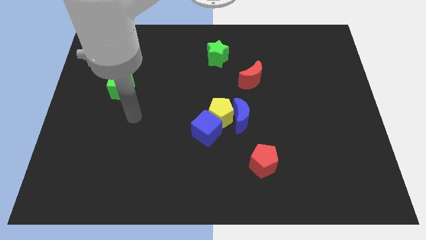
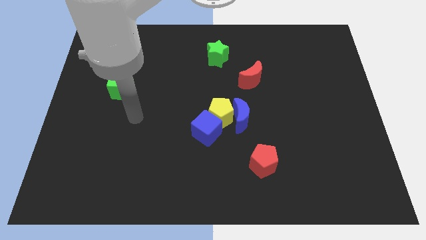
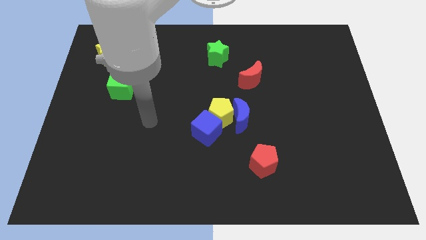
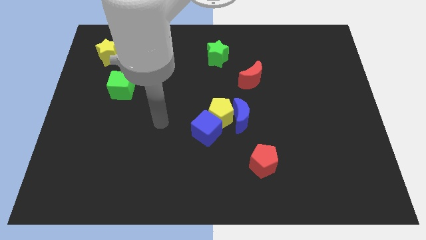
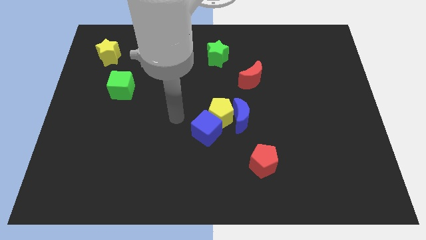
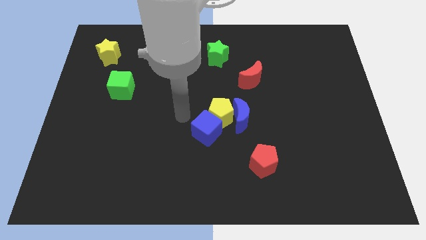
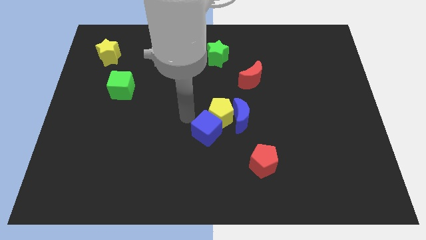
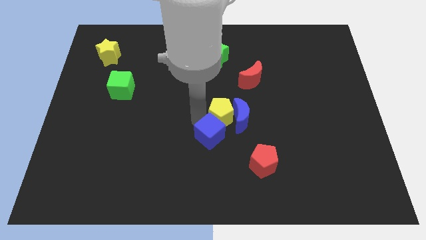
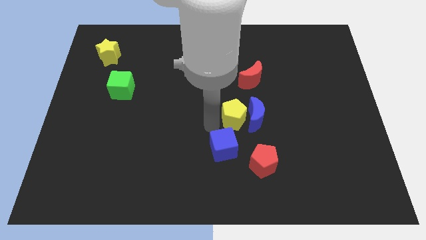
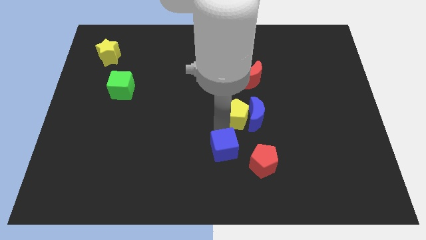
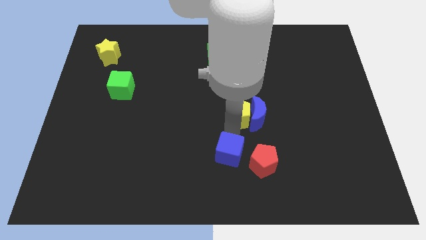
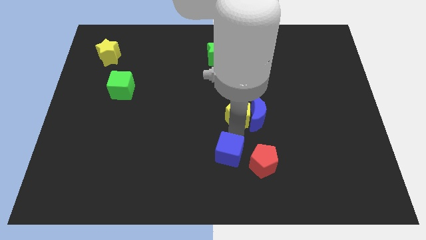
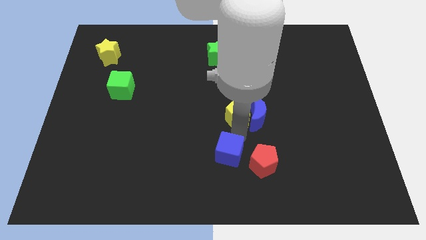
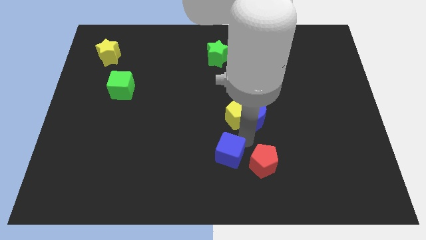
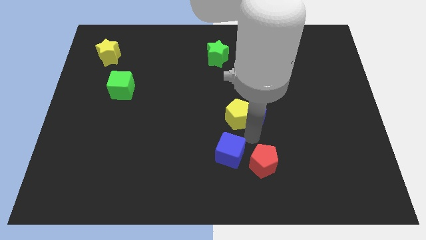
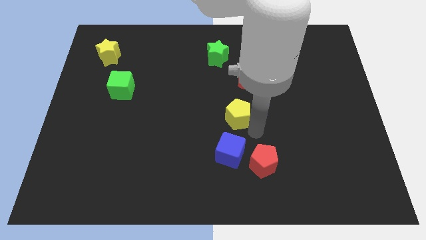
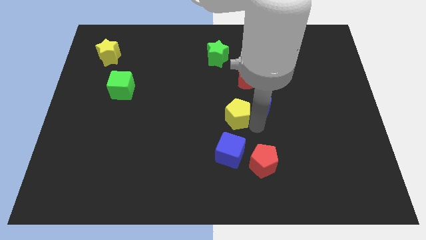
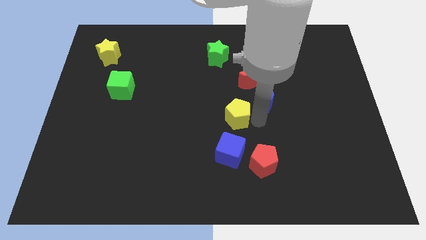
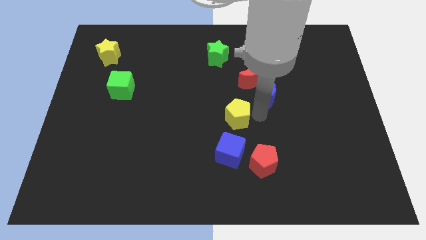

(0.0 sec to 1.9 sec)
separate yellow pentagon and blue block

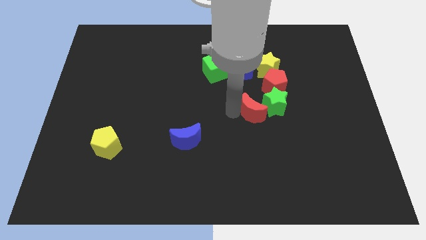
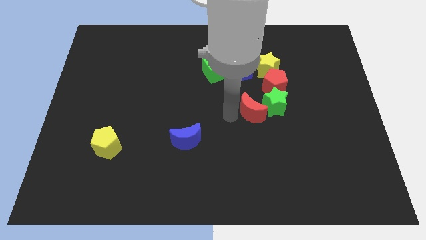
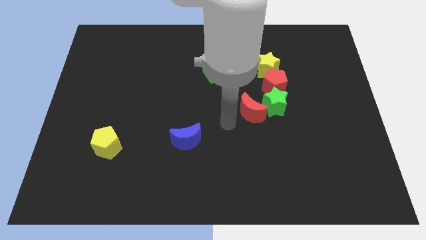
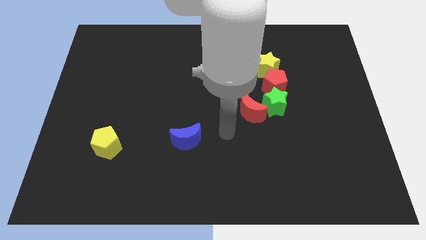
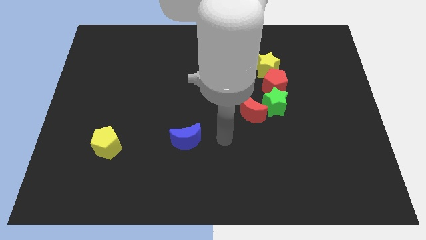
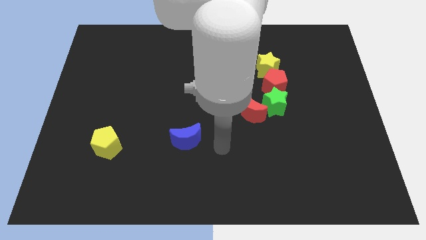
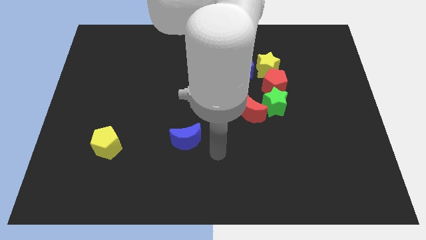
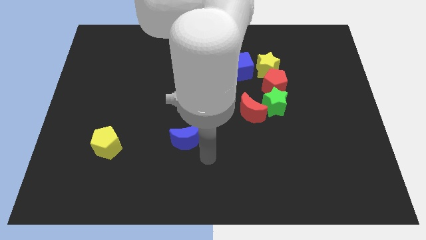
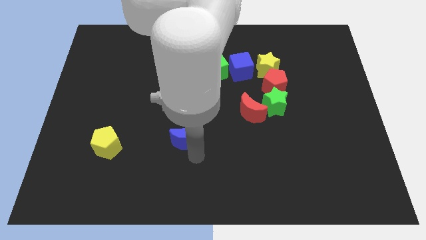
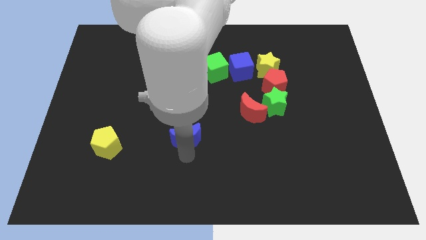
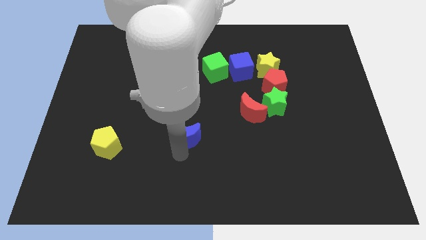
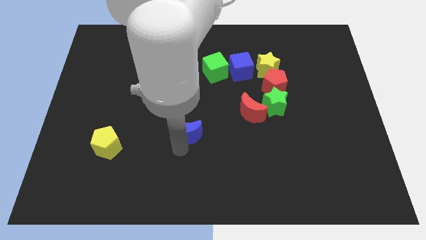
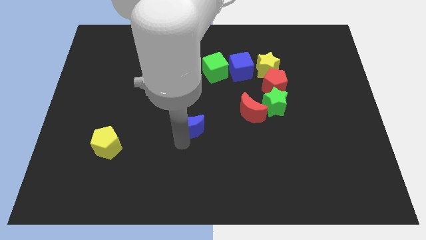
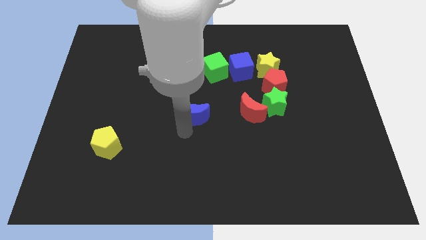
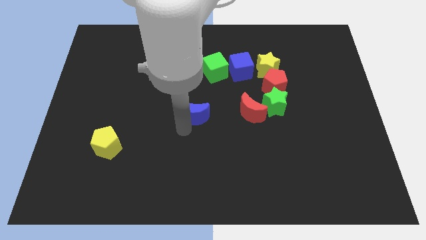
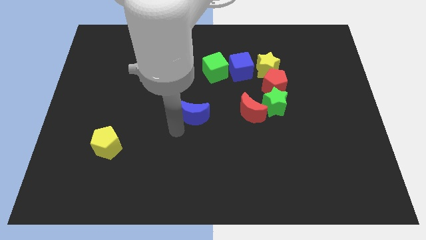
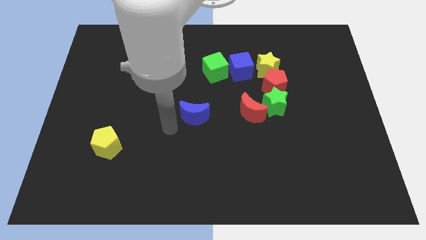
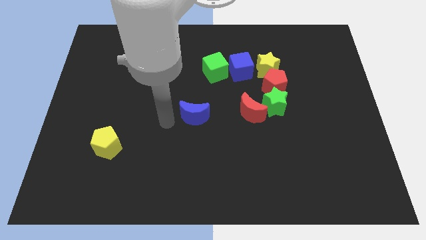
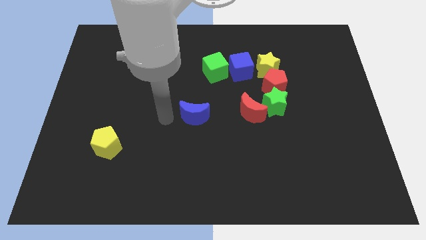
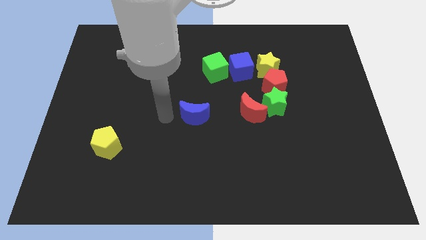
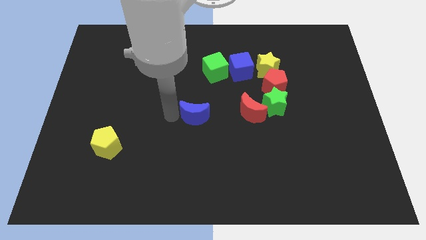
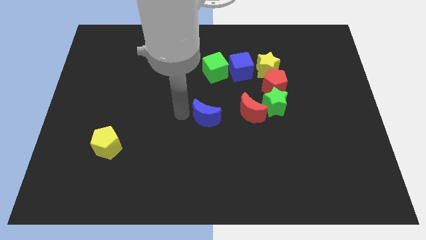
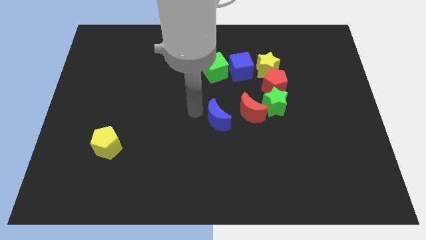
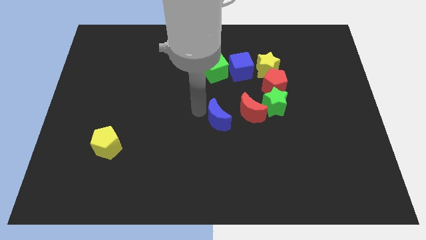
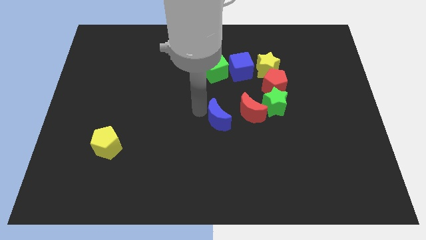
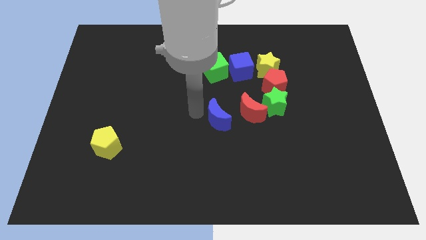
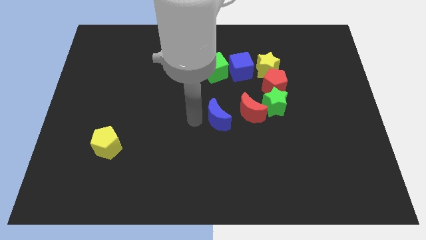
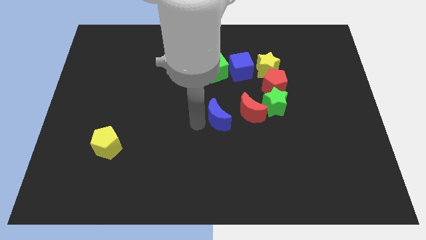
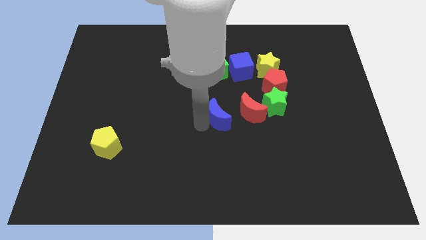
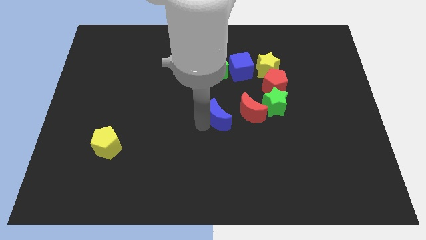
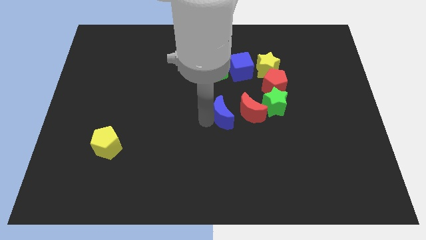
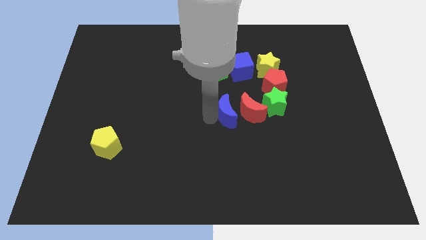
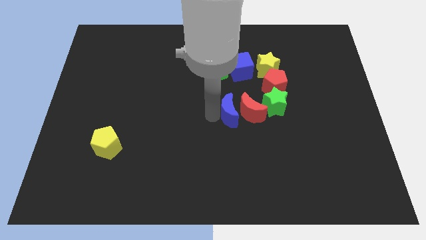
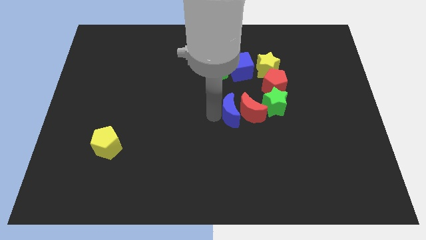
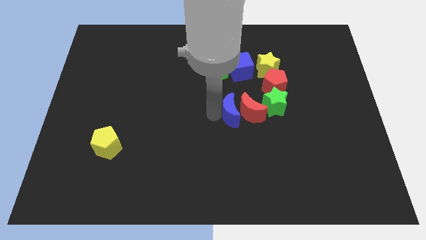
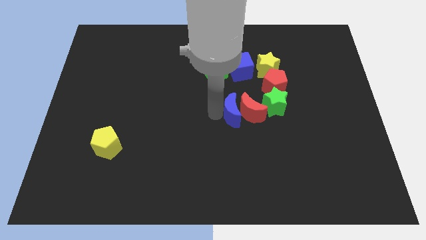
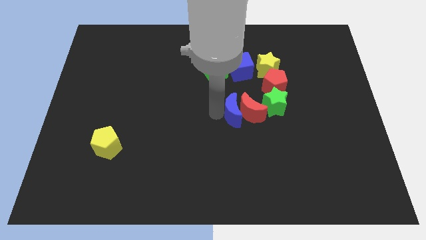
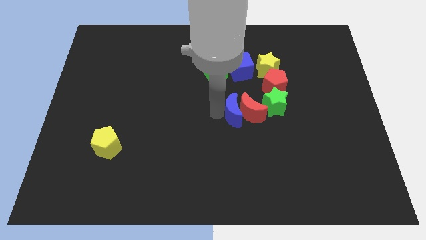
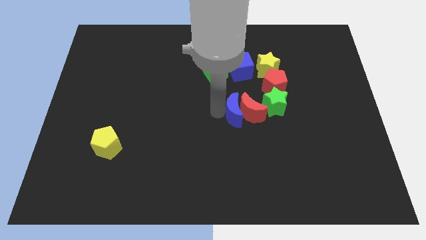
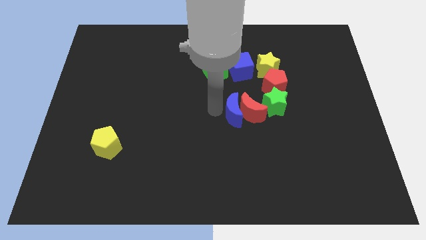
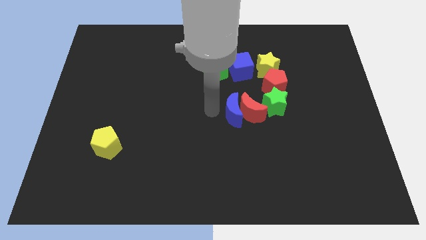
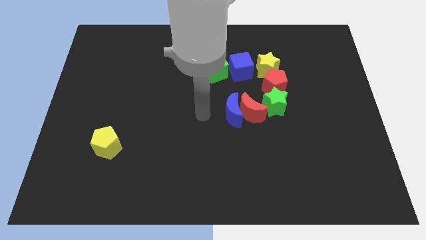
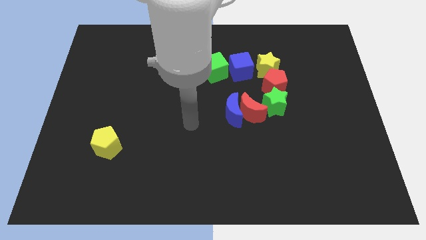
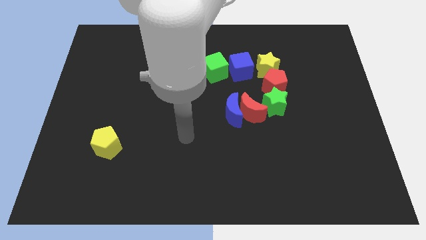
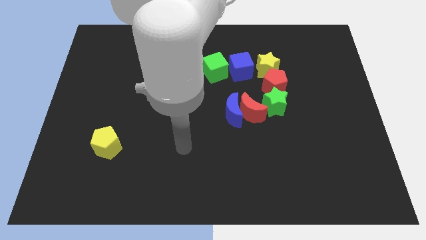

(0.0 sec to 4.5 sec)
push blue crescent close to the red crescent

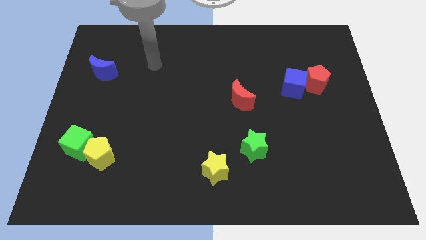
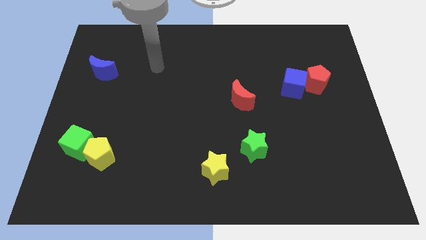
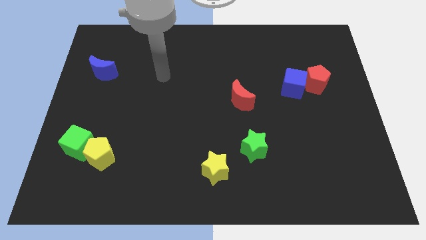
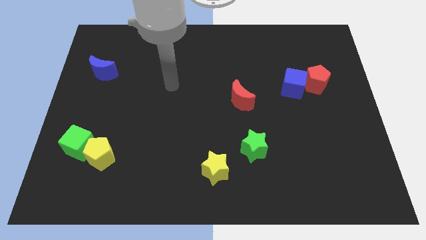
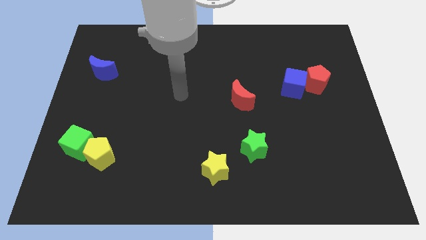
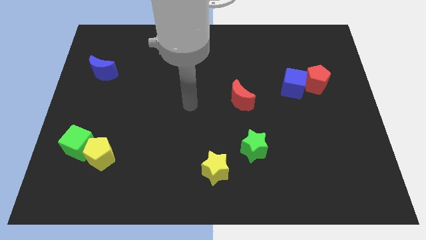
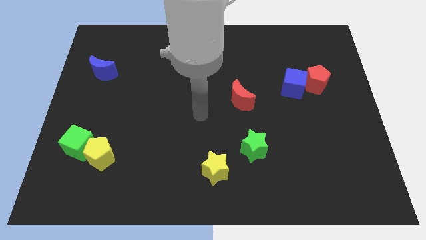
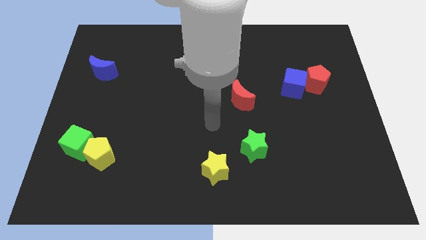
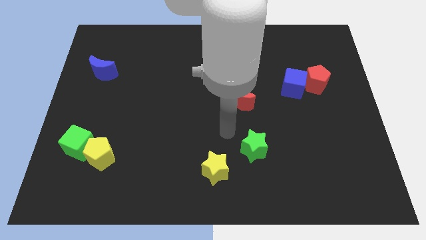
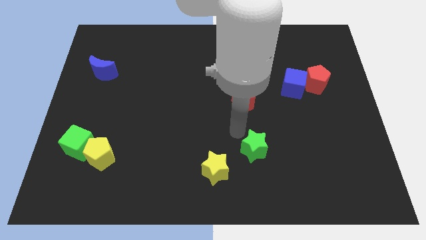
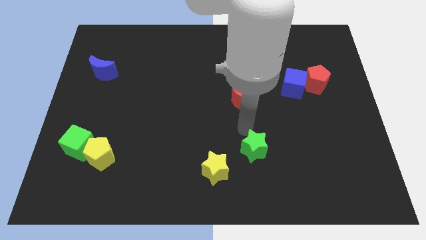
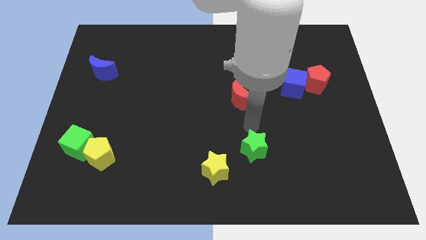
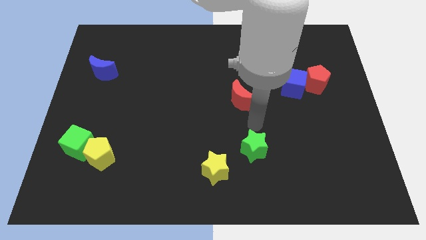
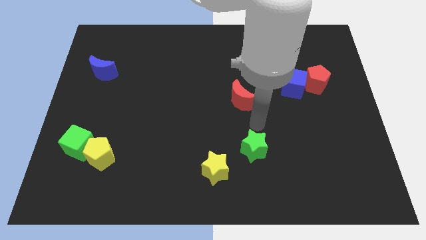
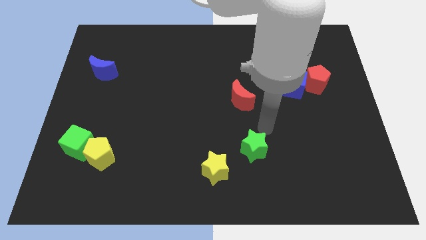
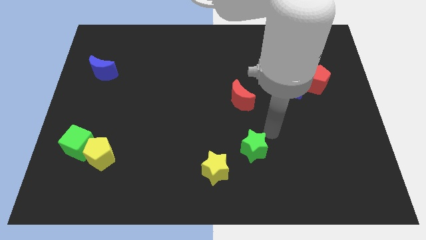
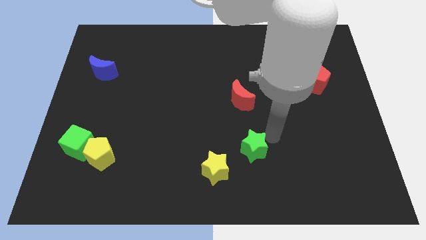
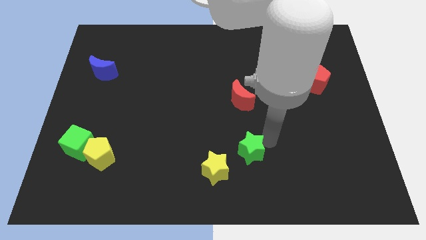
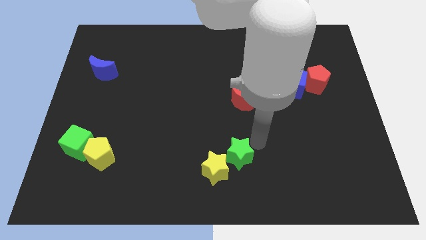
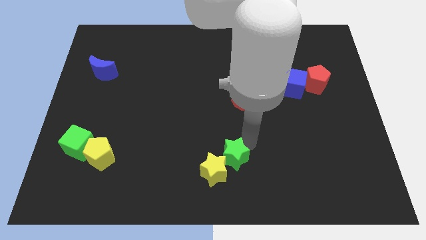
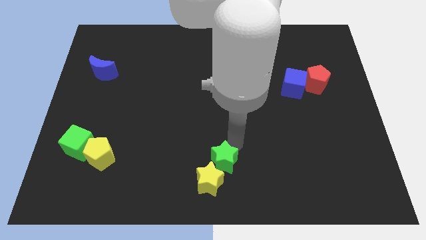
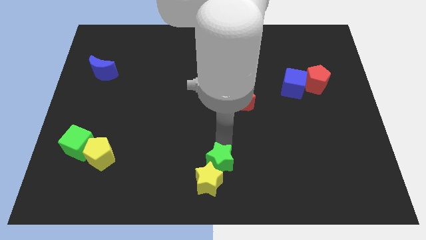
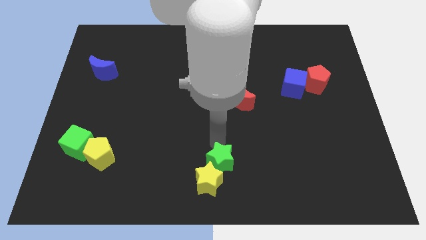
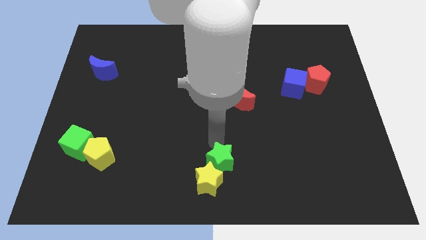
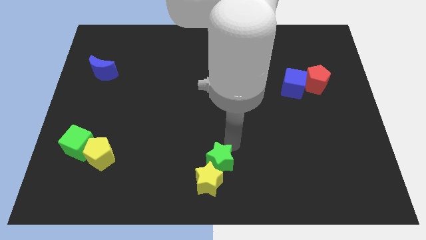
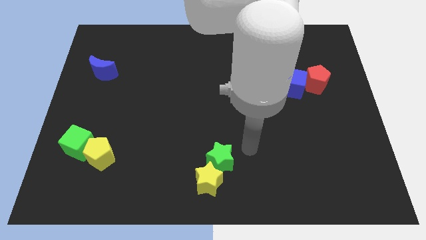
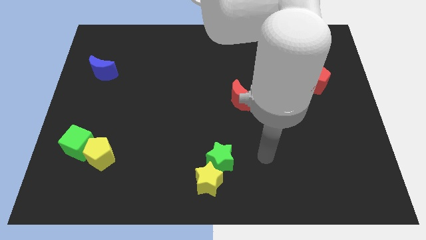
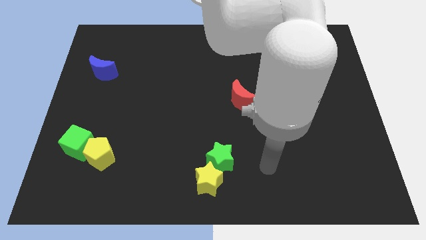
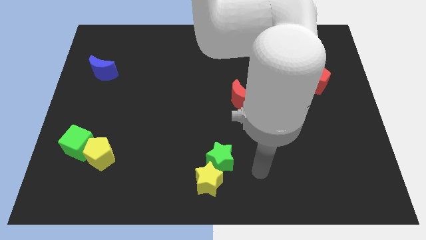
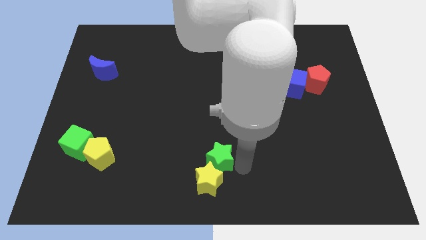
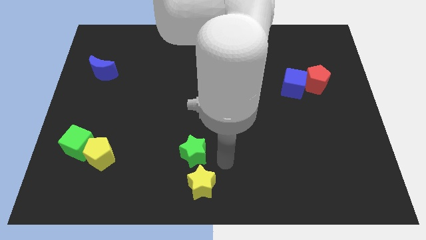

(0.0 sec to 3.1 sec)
push the green star above the yellow star
